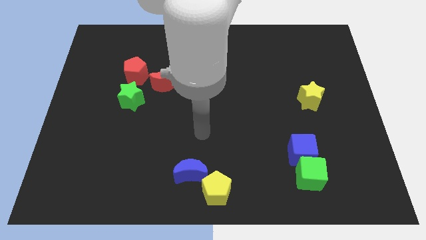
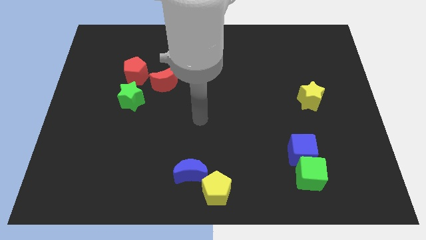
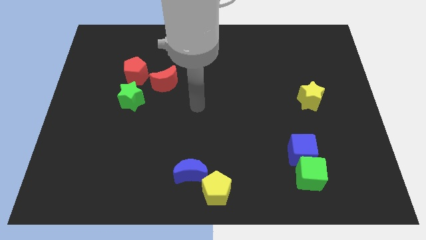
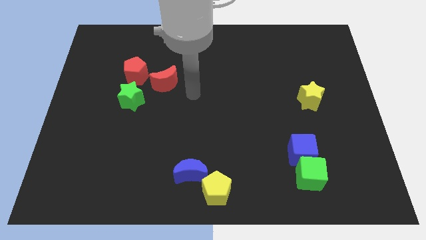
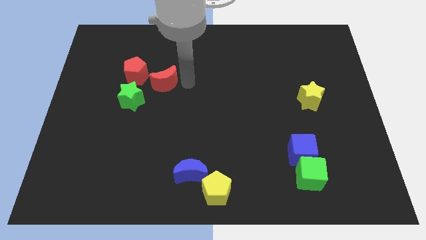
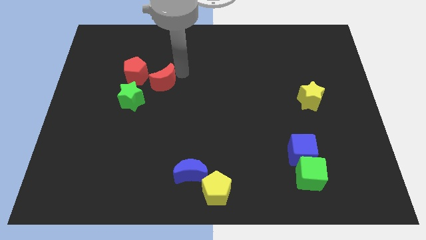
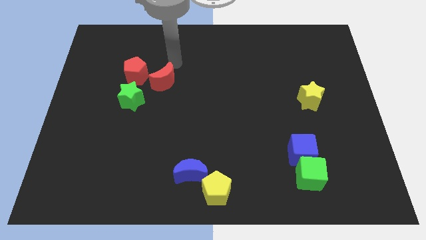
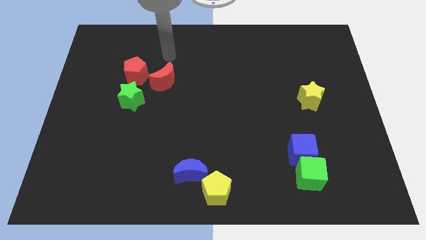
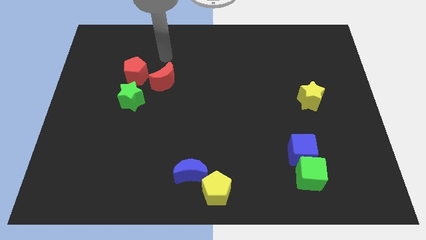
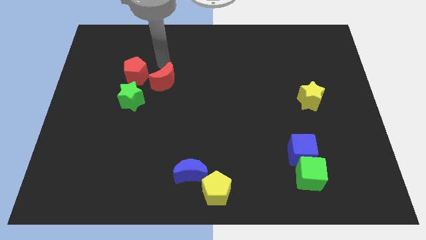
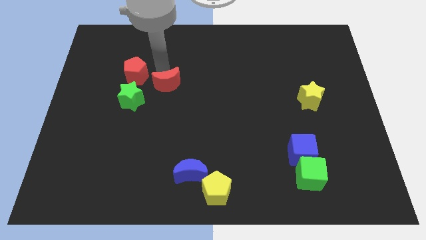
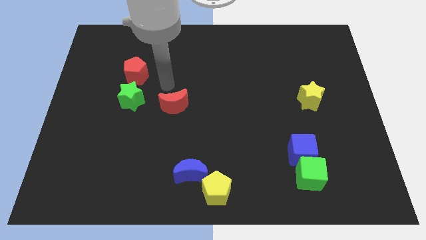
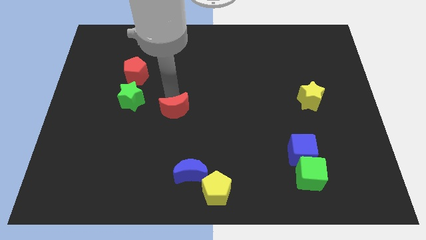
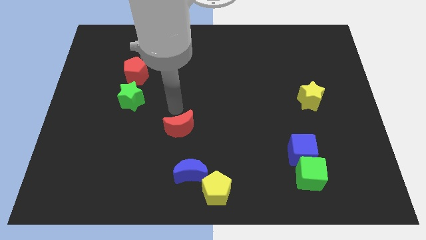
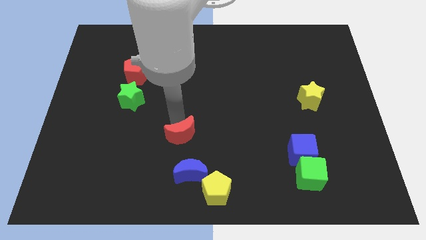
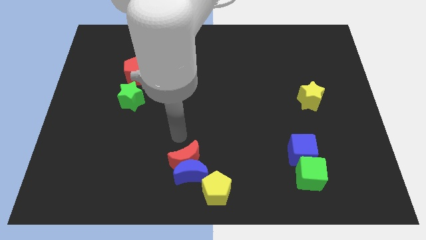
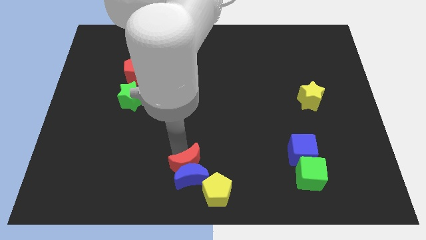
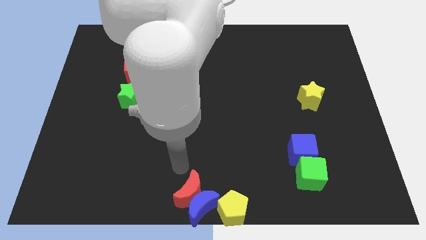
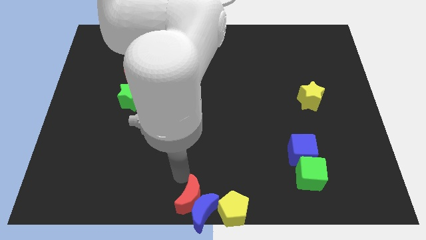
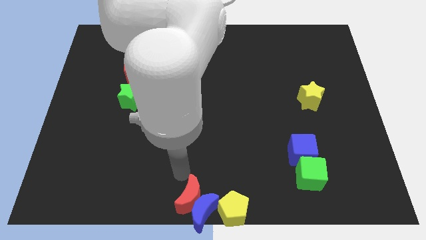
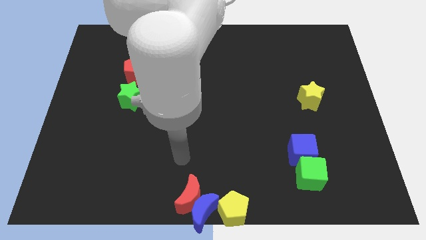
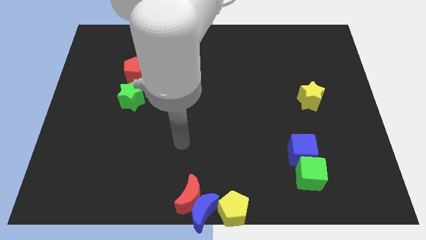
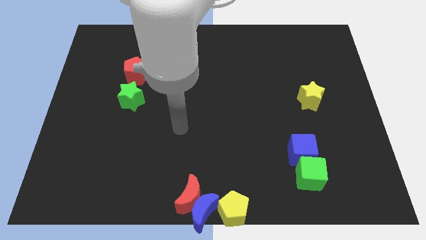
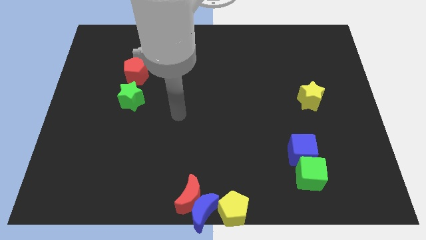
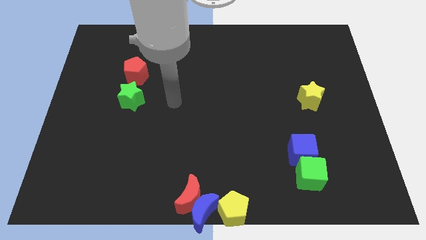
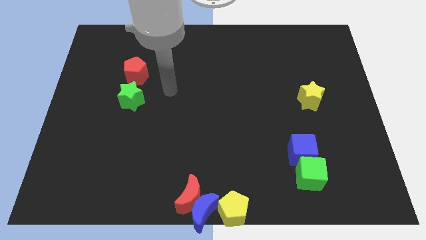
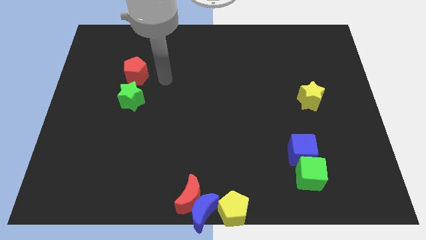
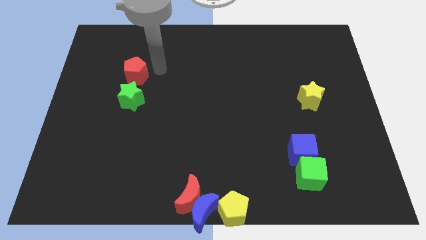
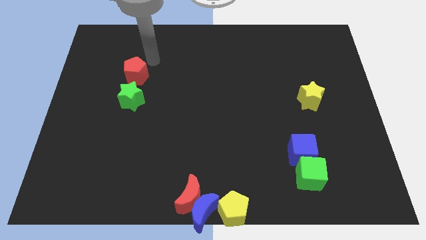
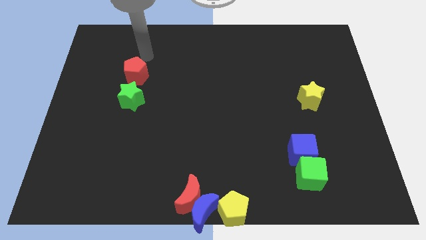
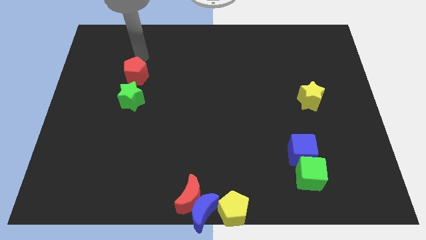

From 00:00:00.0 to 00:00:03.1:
move the red crescent to the left of the blue crescent

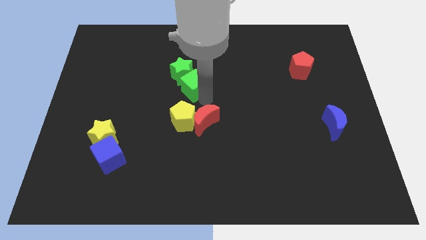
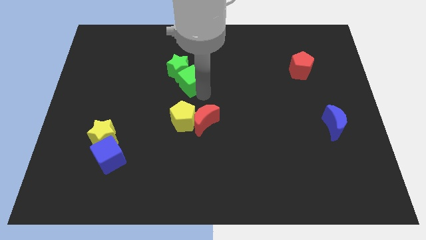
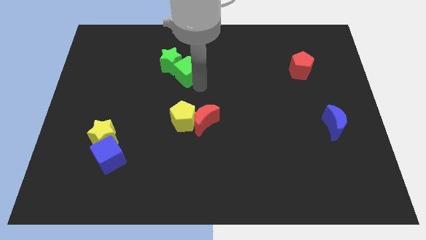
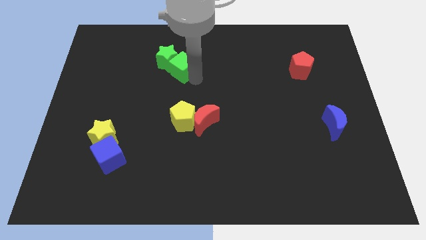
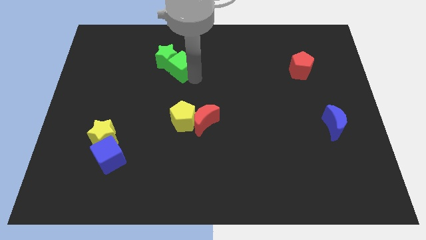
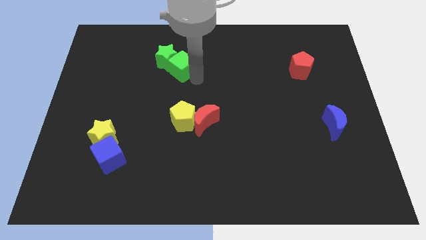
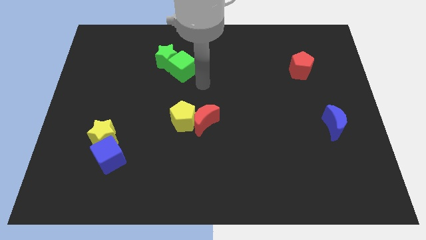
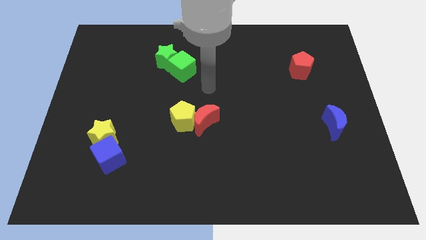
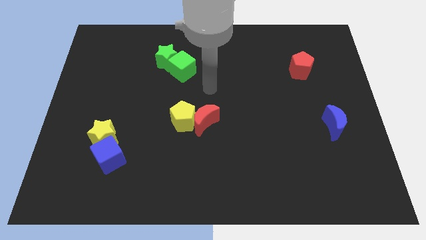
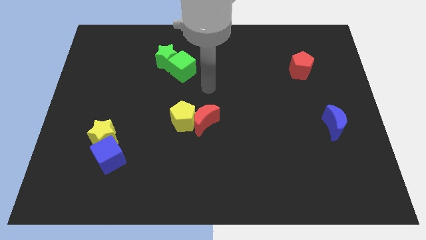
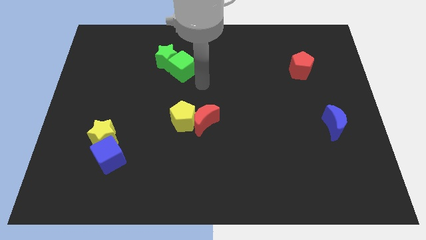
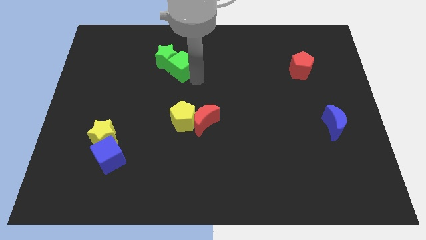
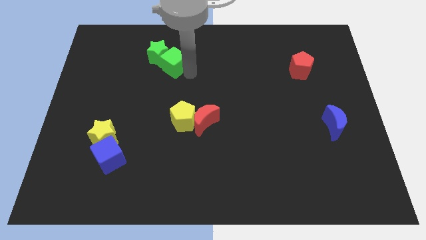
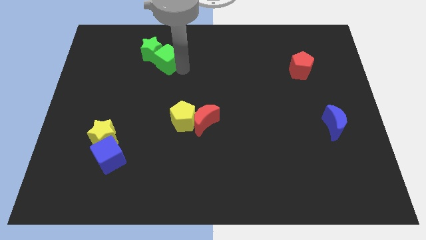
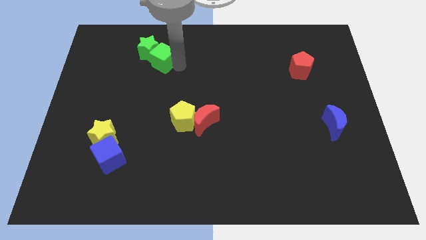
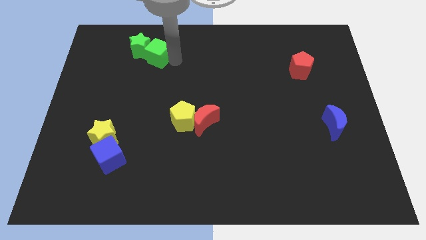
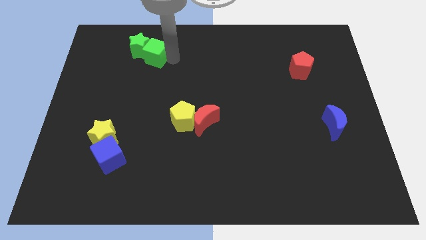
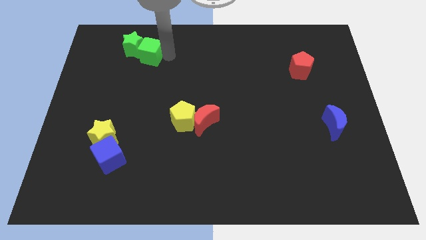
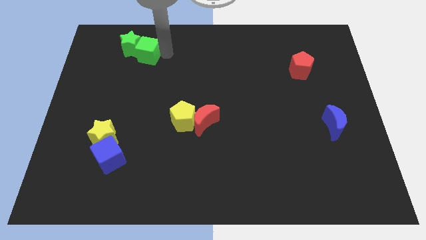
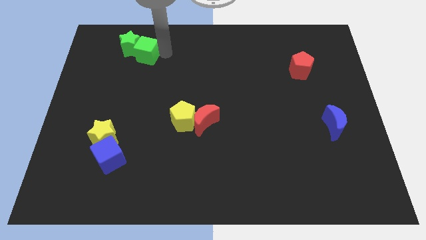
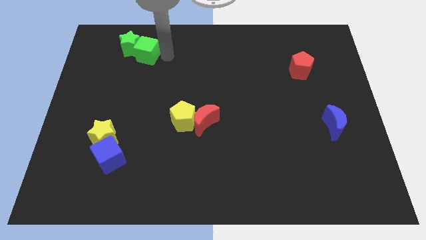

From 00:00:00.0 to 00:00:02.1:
move the green star and green cube to the top left corner of the board

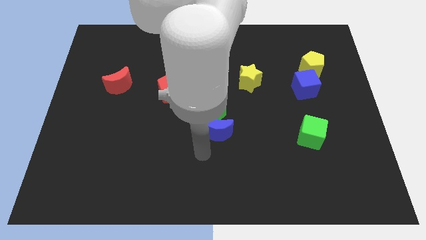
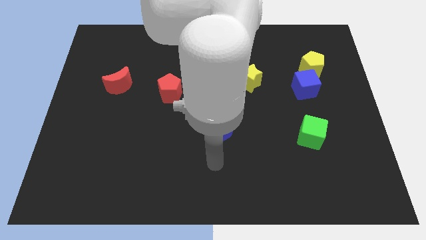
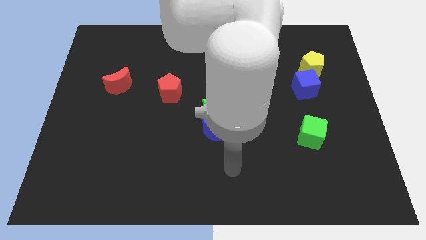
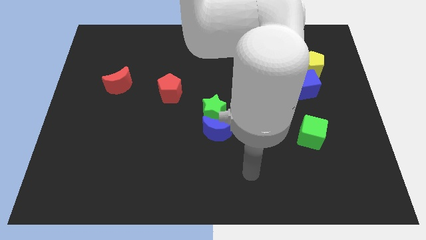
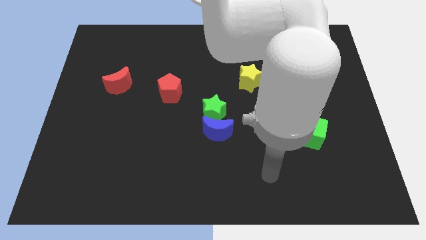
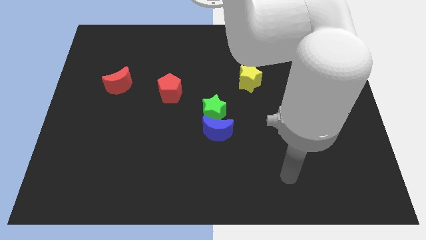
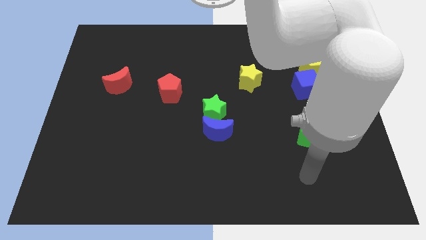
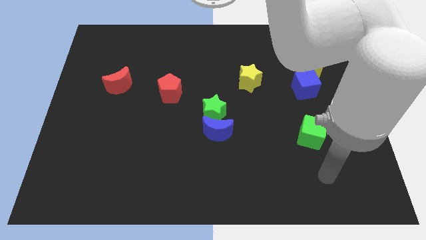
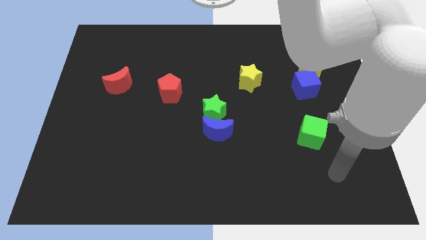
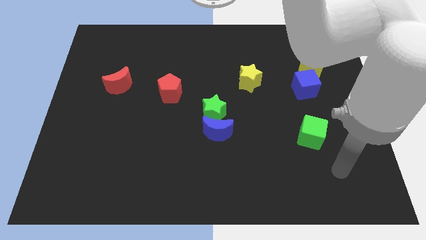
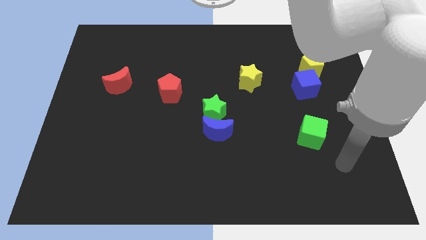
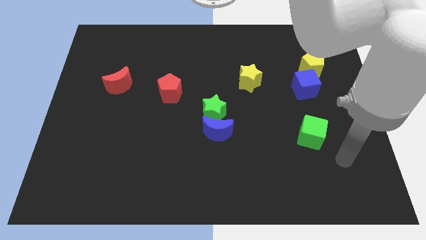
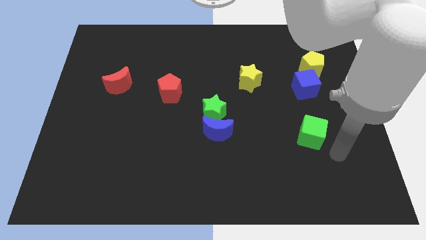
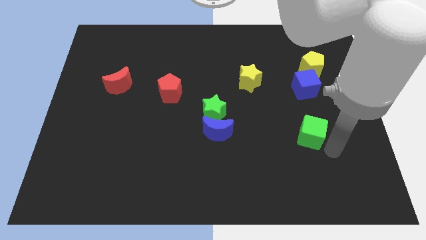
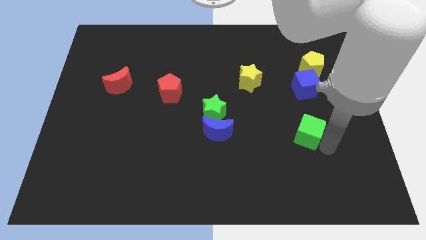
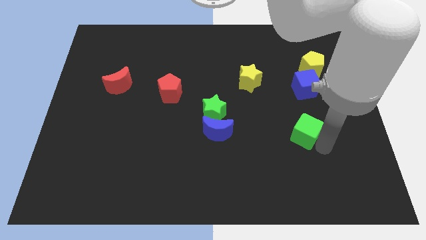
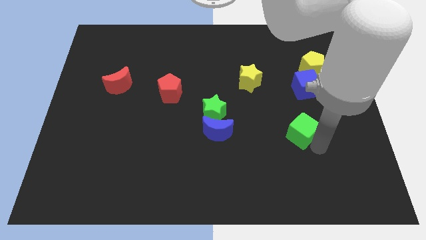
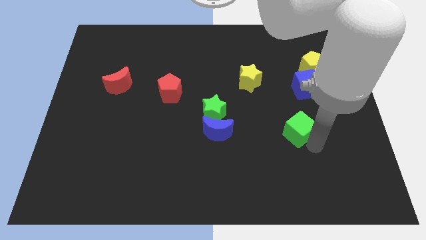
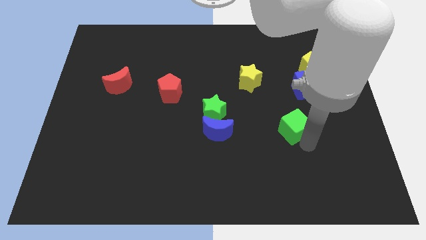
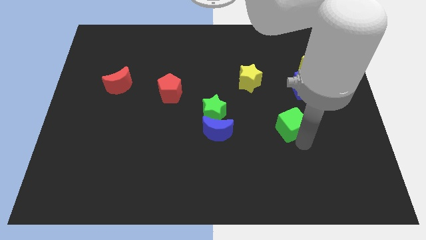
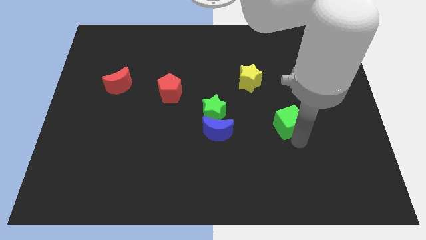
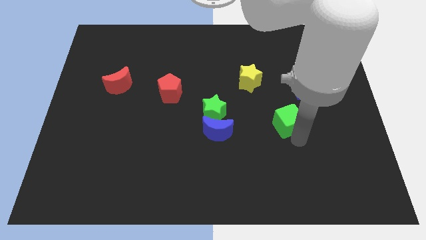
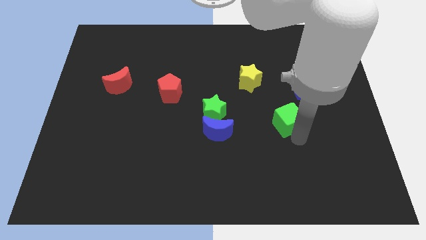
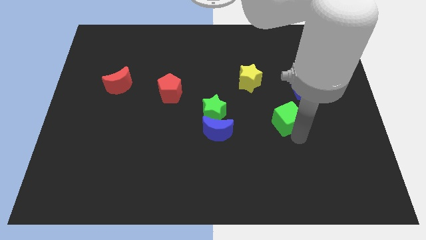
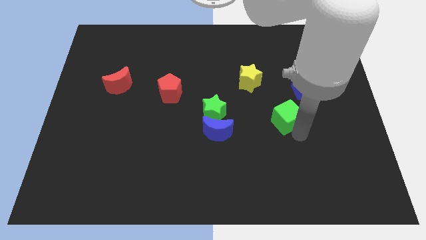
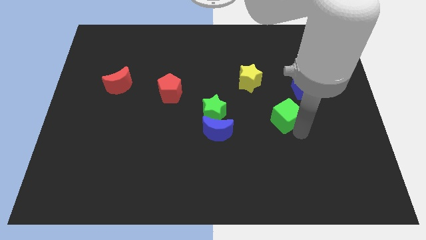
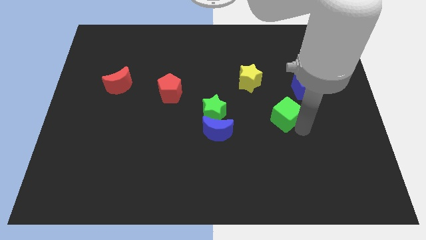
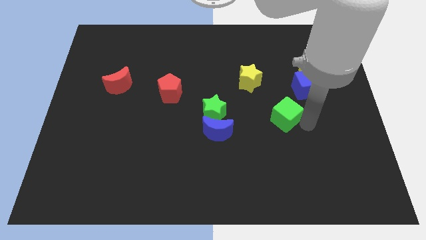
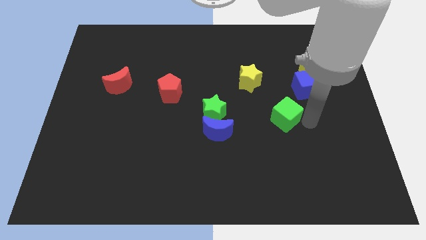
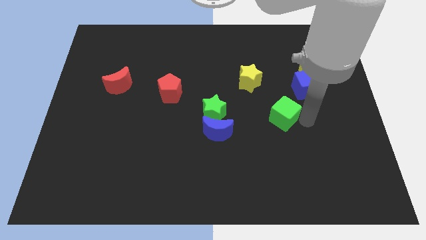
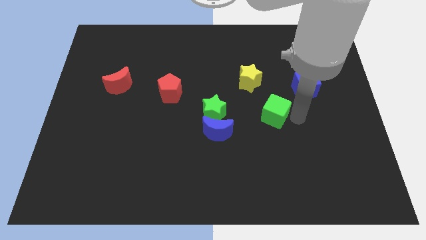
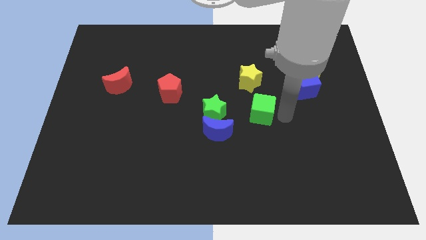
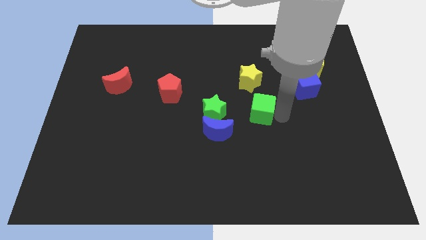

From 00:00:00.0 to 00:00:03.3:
move the green cube to the right of the green star

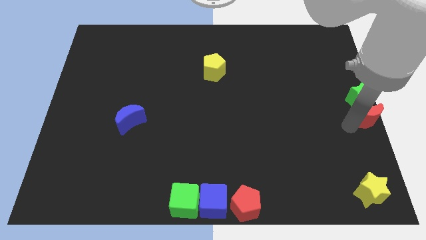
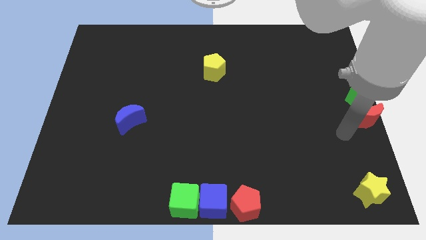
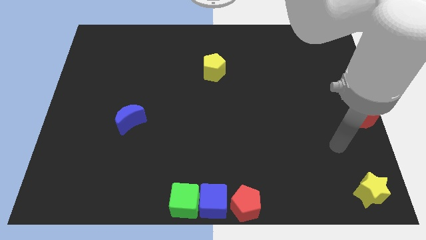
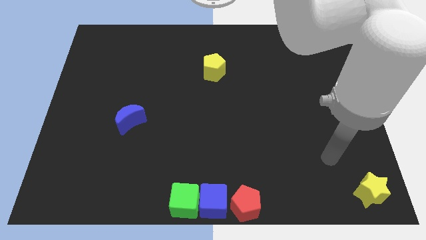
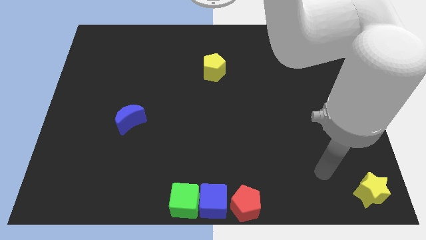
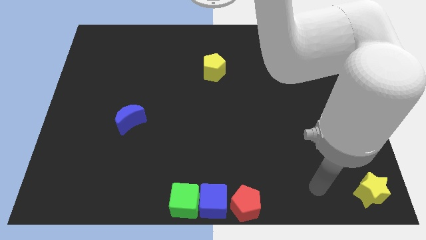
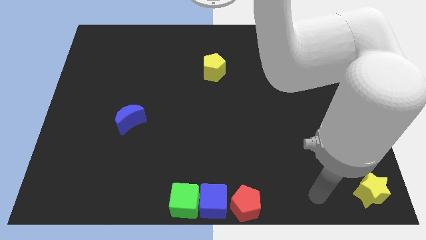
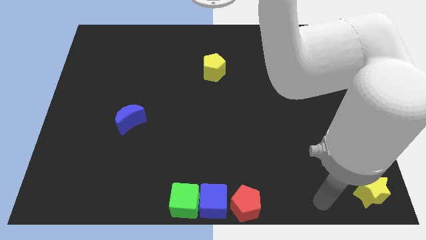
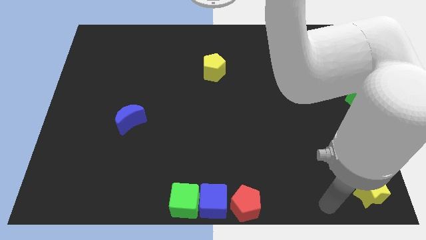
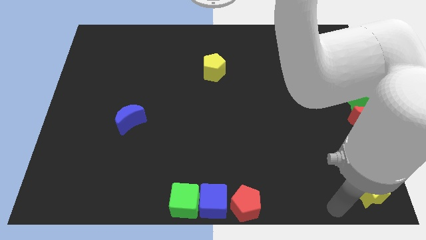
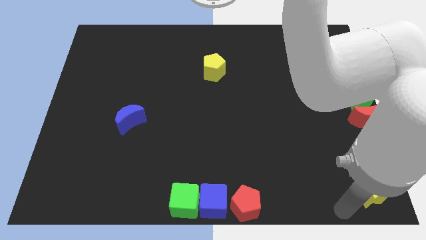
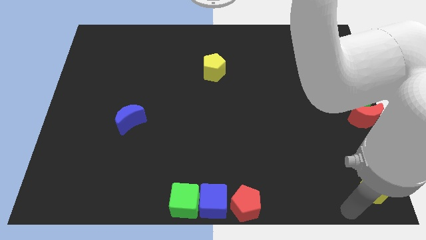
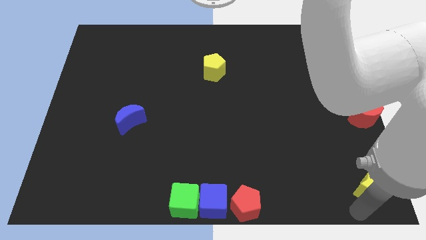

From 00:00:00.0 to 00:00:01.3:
move your arm away from the red moon
